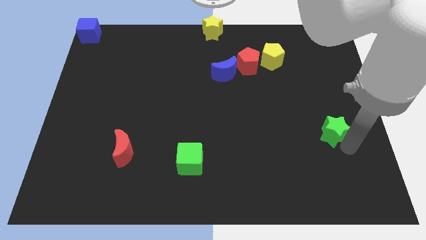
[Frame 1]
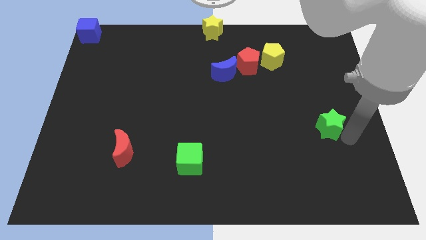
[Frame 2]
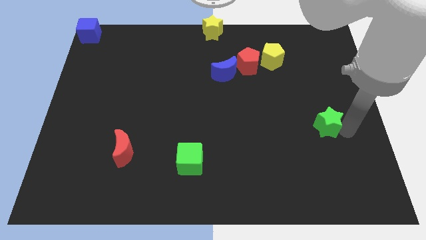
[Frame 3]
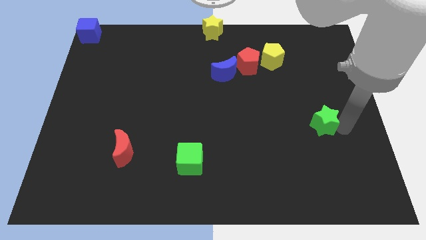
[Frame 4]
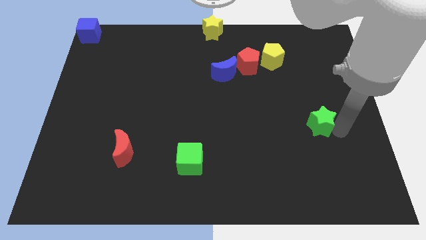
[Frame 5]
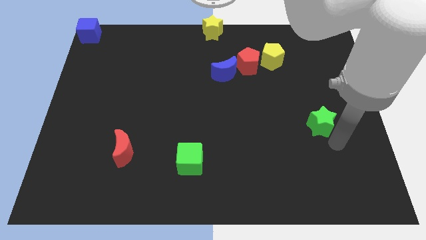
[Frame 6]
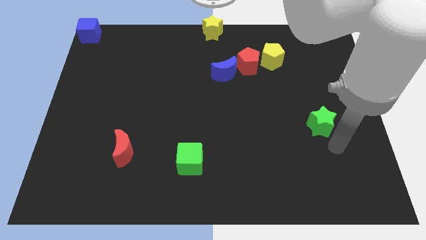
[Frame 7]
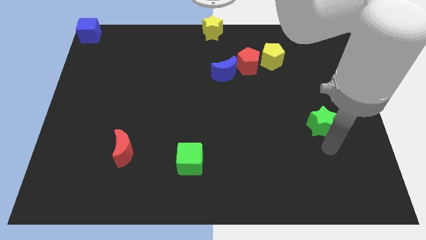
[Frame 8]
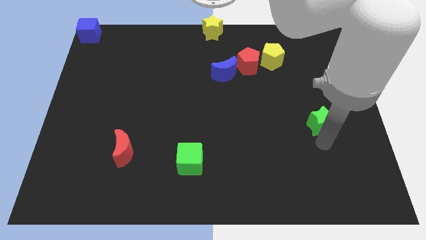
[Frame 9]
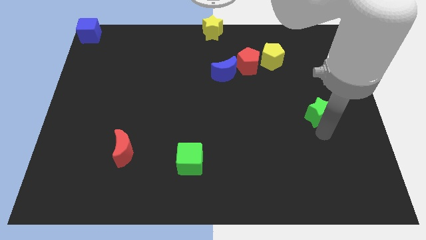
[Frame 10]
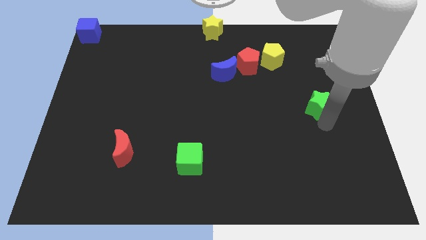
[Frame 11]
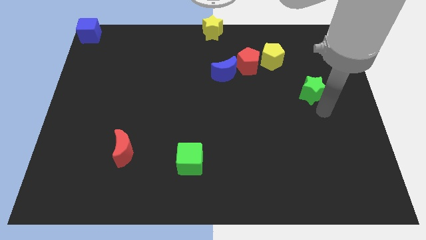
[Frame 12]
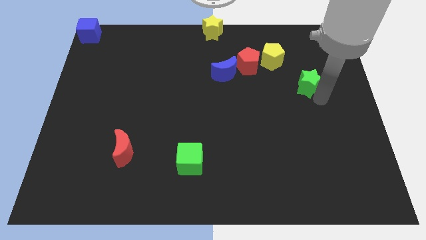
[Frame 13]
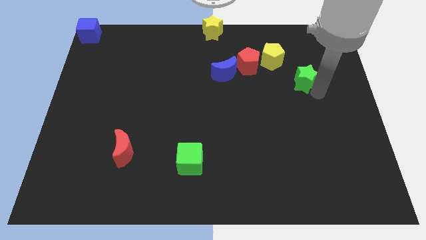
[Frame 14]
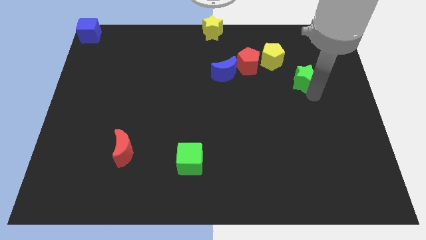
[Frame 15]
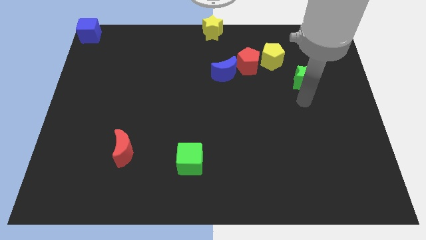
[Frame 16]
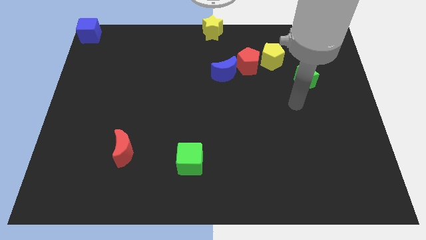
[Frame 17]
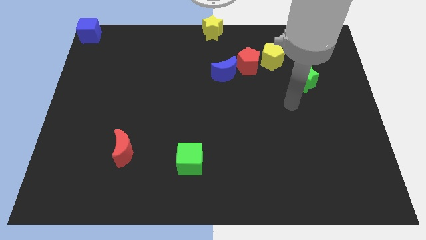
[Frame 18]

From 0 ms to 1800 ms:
move the green star up slightly

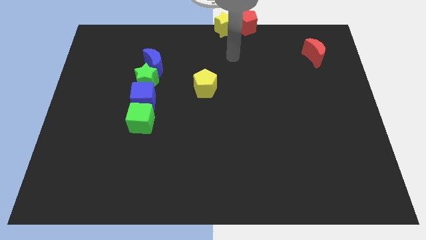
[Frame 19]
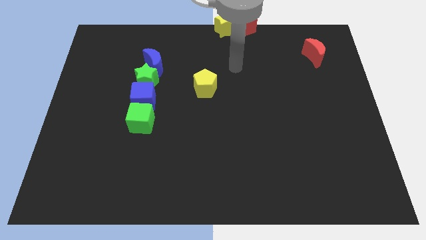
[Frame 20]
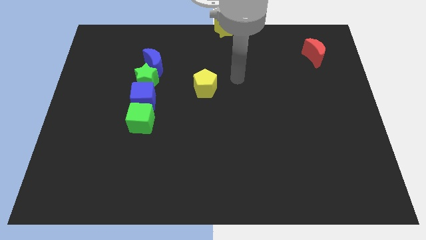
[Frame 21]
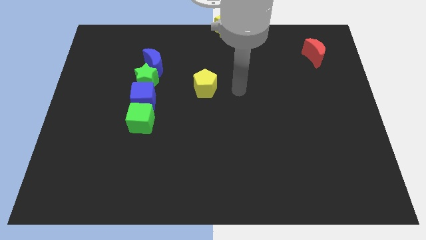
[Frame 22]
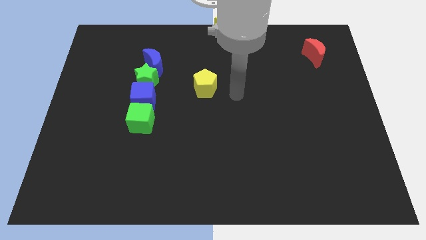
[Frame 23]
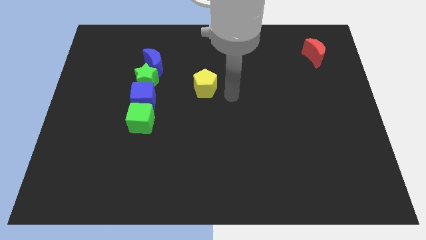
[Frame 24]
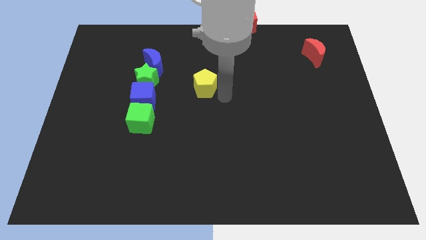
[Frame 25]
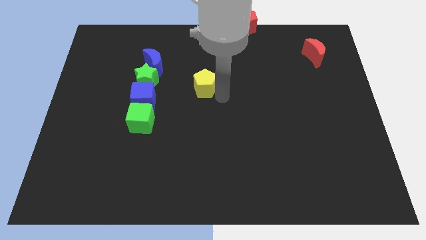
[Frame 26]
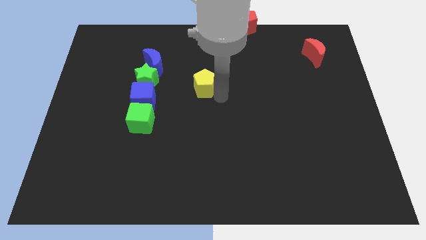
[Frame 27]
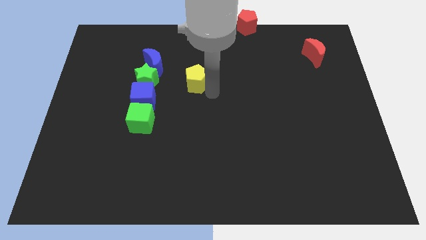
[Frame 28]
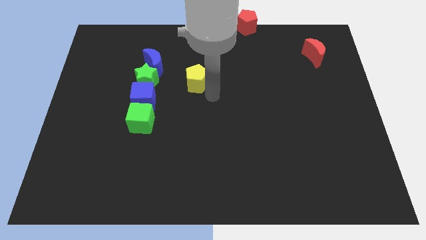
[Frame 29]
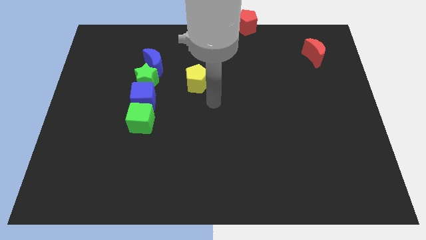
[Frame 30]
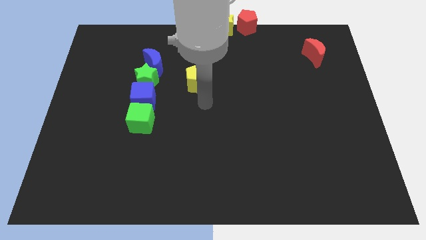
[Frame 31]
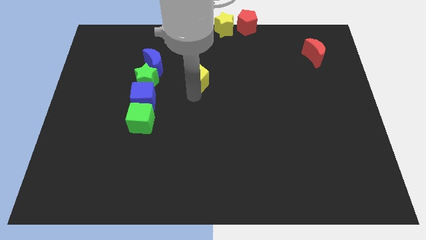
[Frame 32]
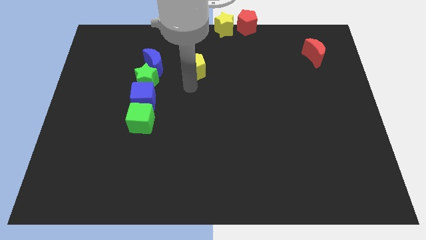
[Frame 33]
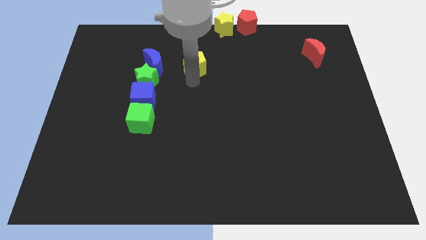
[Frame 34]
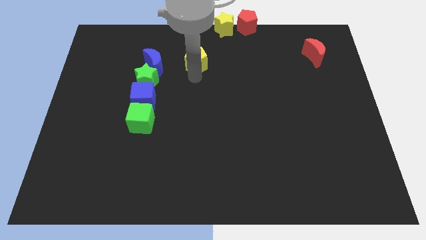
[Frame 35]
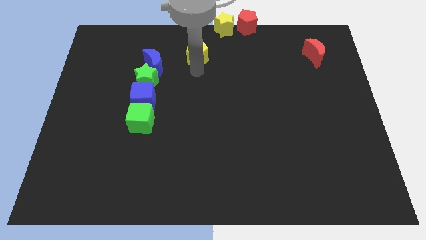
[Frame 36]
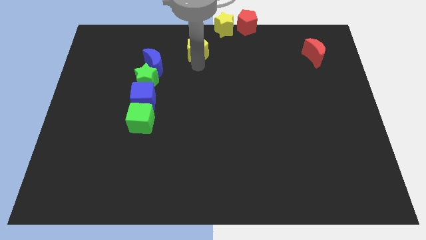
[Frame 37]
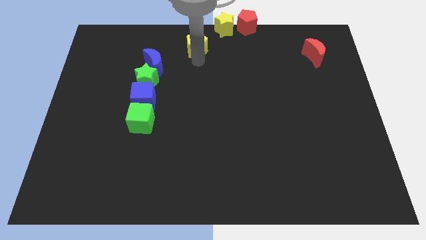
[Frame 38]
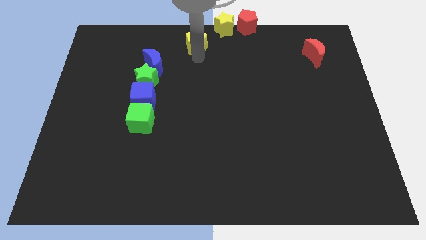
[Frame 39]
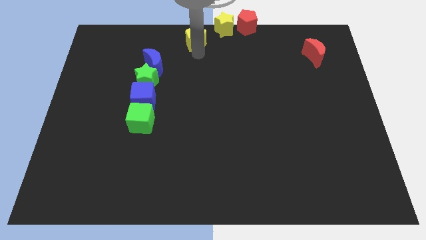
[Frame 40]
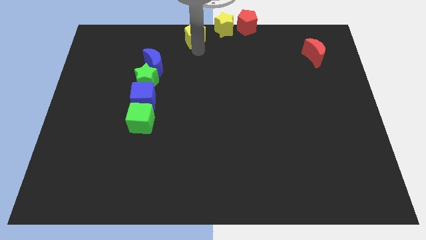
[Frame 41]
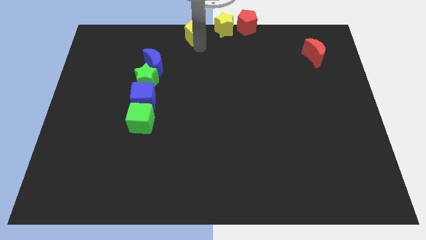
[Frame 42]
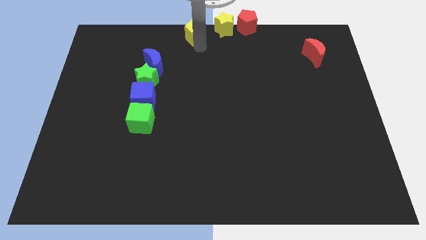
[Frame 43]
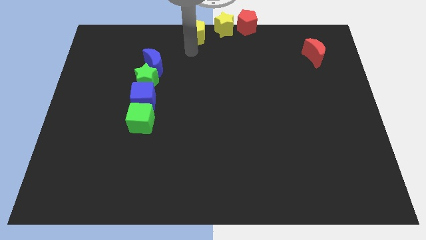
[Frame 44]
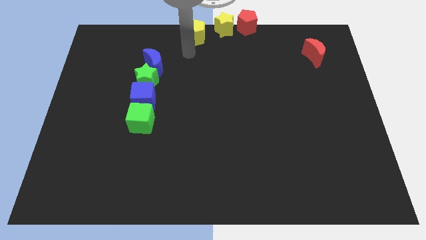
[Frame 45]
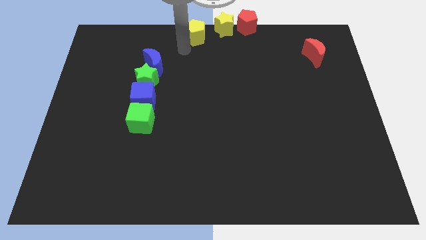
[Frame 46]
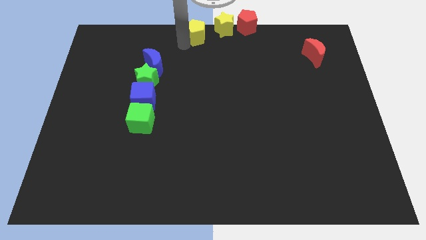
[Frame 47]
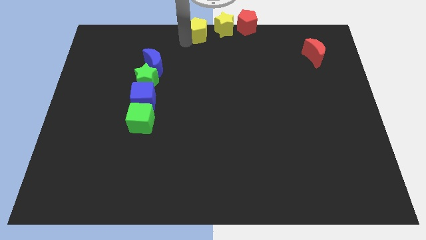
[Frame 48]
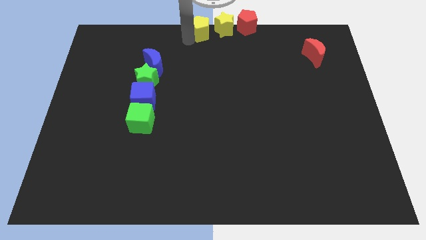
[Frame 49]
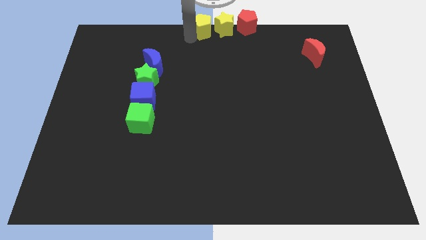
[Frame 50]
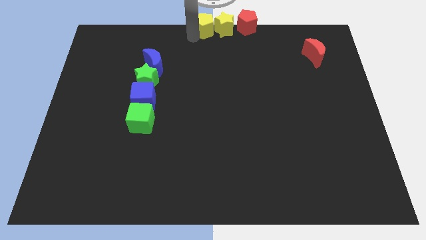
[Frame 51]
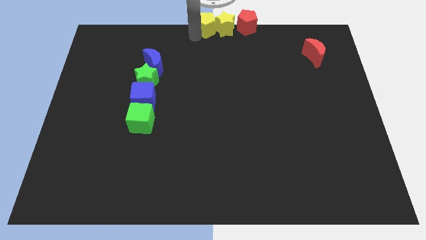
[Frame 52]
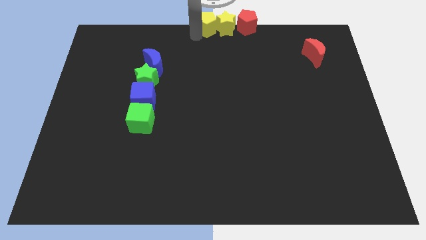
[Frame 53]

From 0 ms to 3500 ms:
drag the yellow pentagon into the left side of the yellow star

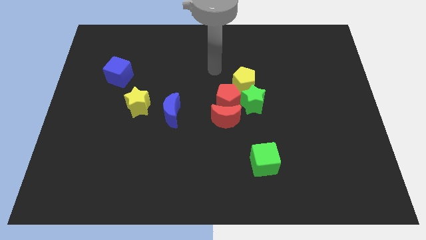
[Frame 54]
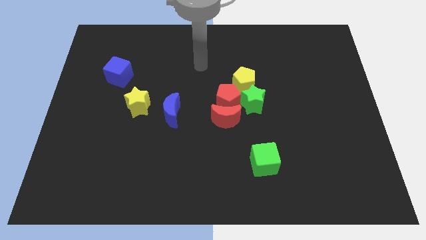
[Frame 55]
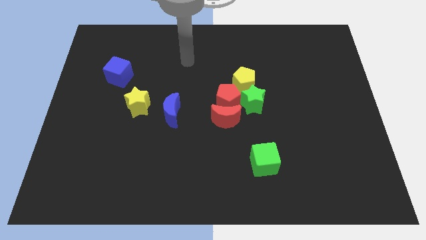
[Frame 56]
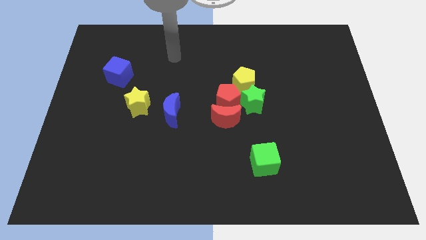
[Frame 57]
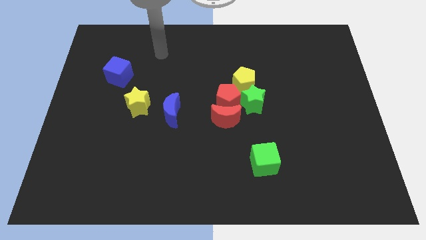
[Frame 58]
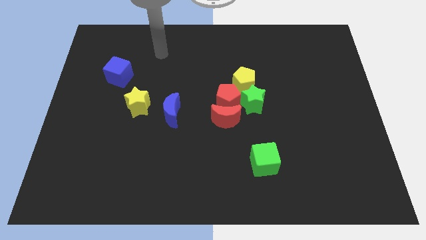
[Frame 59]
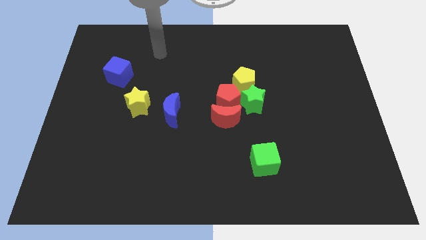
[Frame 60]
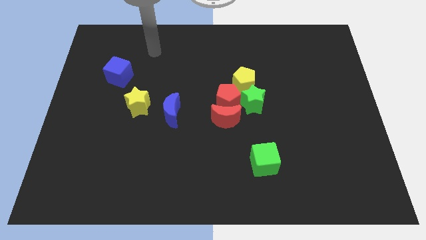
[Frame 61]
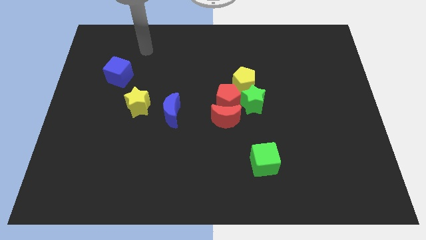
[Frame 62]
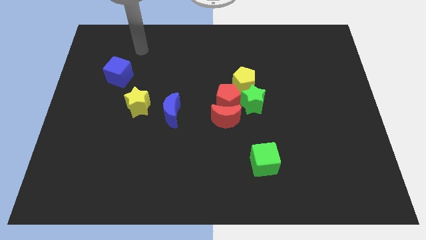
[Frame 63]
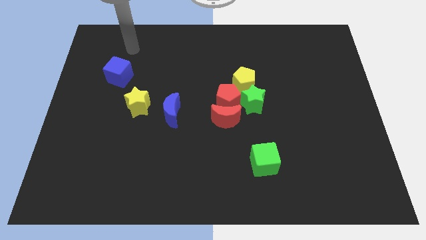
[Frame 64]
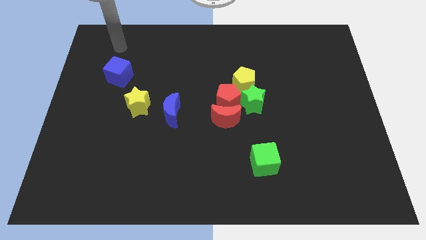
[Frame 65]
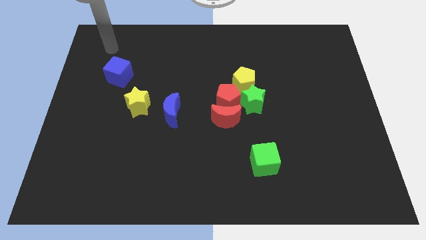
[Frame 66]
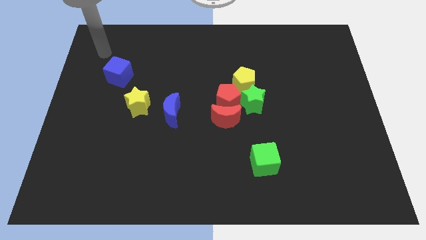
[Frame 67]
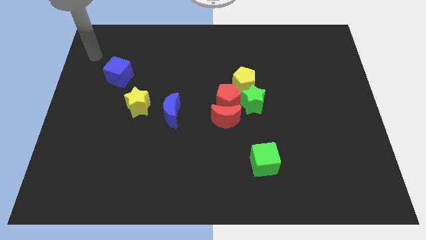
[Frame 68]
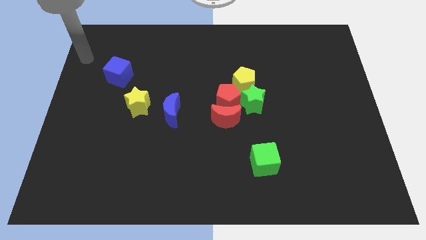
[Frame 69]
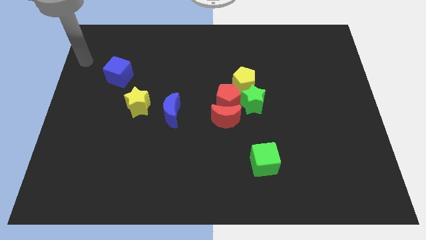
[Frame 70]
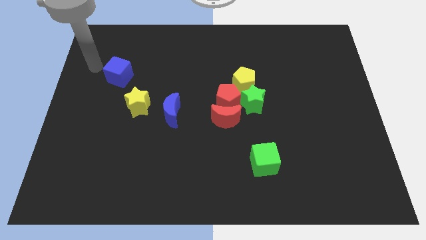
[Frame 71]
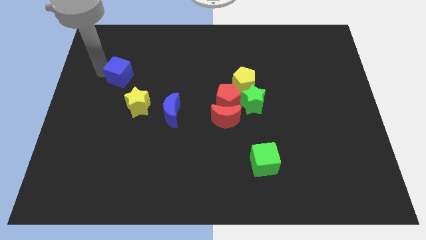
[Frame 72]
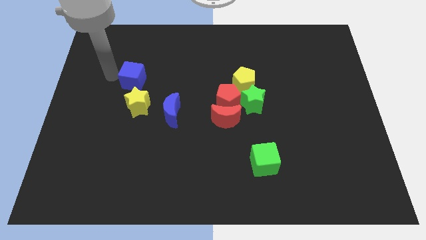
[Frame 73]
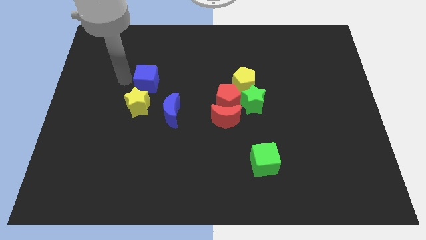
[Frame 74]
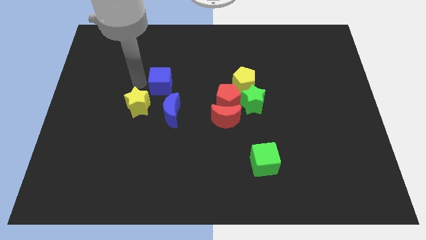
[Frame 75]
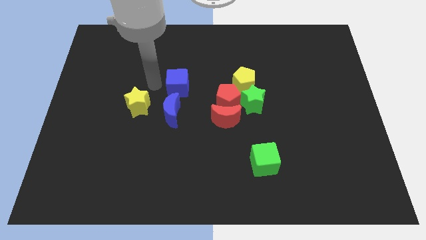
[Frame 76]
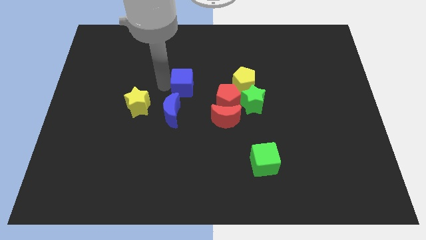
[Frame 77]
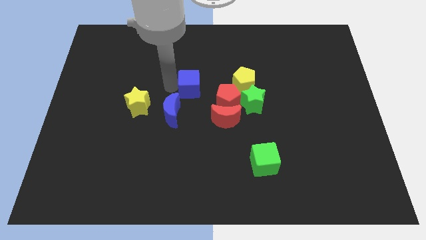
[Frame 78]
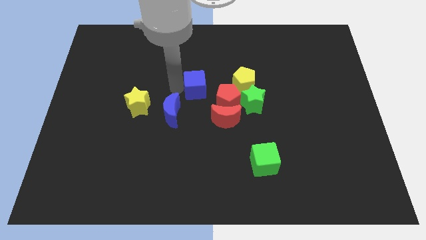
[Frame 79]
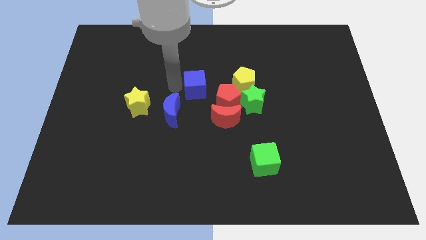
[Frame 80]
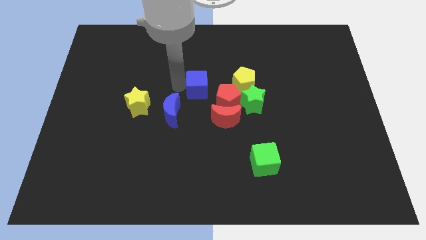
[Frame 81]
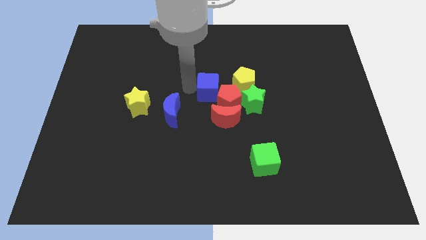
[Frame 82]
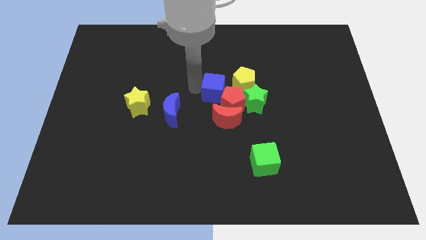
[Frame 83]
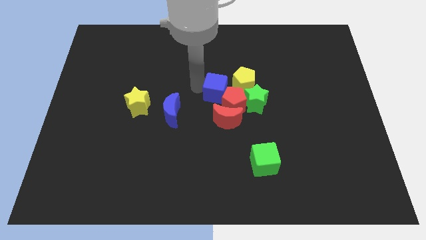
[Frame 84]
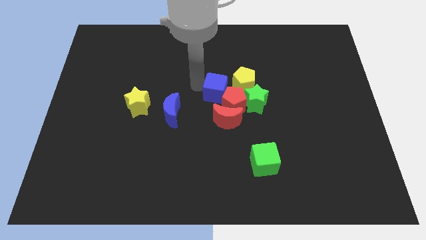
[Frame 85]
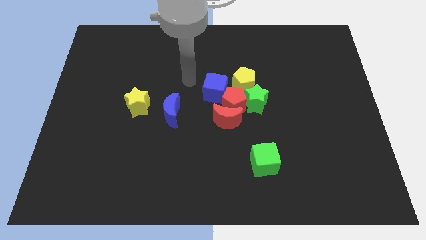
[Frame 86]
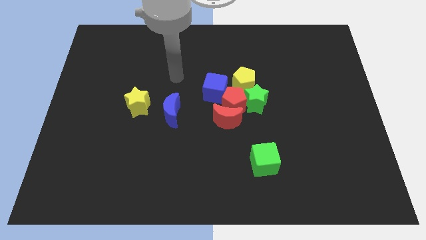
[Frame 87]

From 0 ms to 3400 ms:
put the blue cube at the top left of the red pentagon

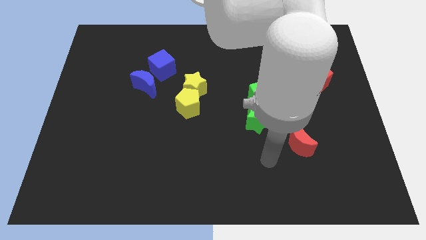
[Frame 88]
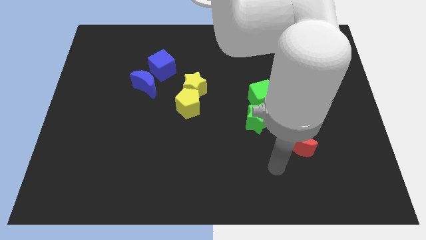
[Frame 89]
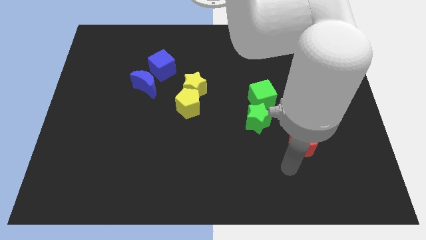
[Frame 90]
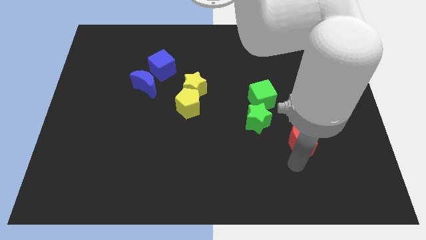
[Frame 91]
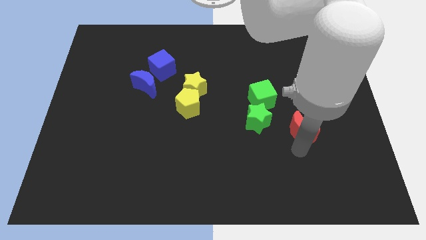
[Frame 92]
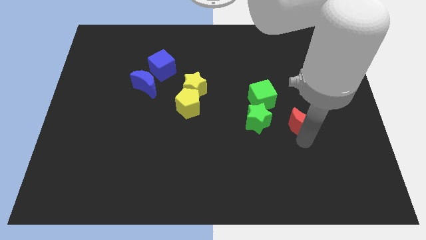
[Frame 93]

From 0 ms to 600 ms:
place the red moon right to the green star
